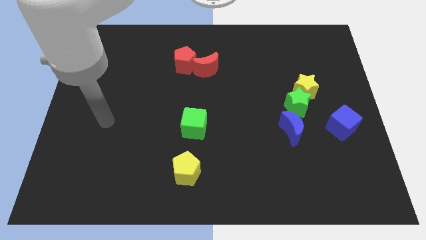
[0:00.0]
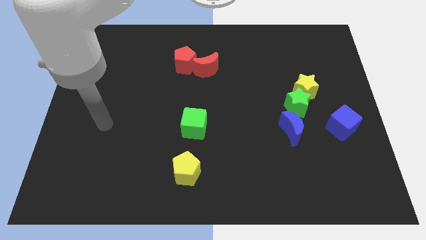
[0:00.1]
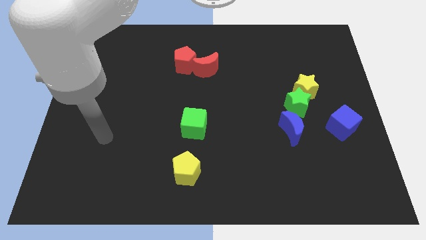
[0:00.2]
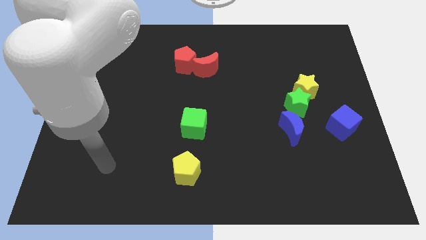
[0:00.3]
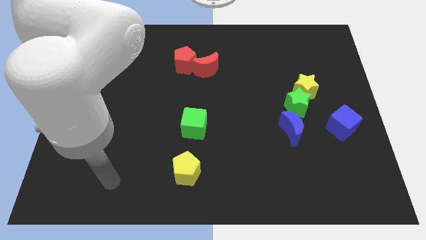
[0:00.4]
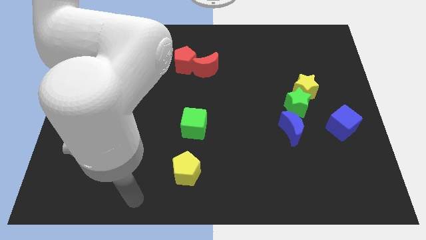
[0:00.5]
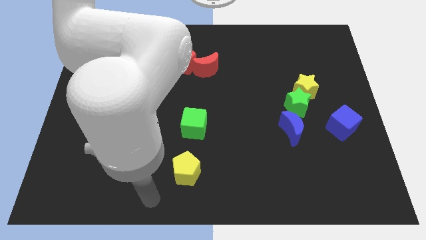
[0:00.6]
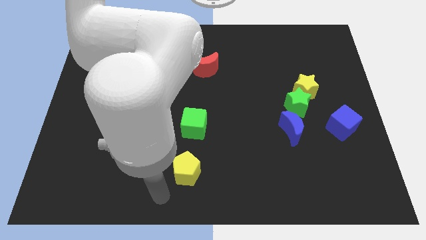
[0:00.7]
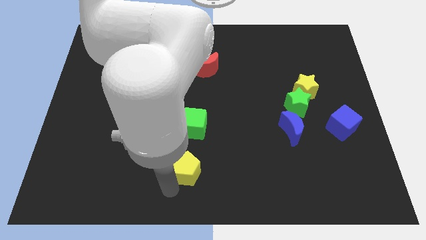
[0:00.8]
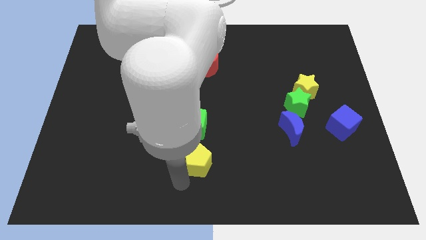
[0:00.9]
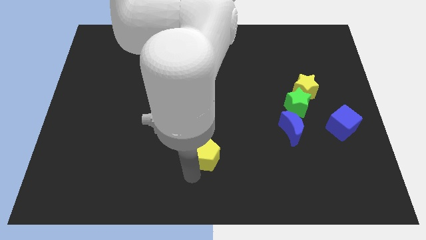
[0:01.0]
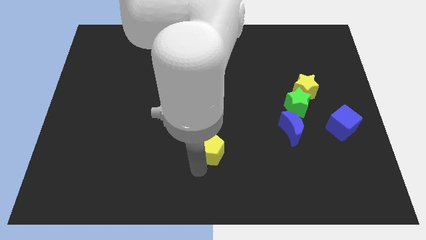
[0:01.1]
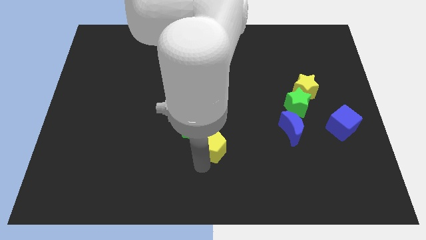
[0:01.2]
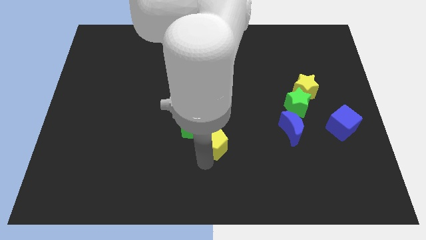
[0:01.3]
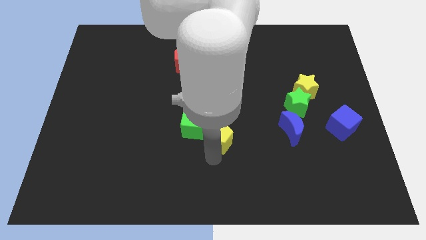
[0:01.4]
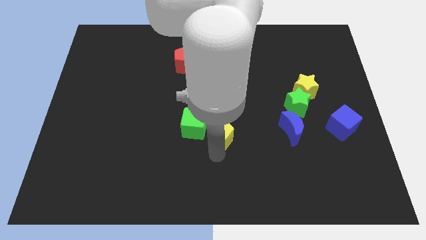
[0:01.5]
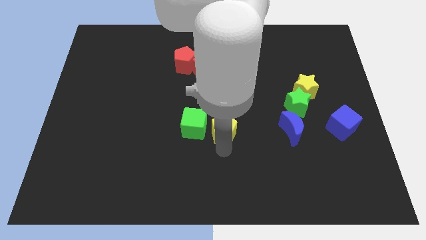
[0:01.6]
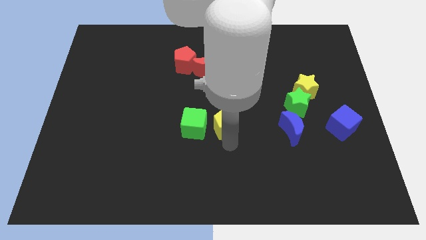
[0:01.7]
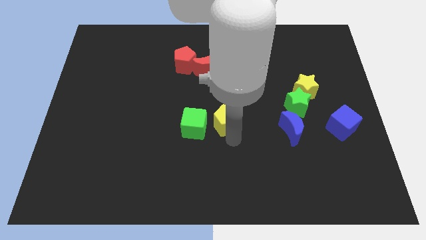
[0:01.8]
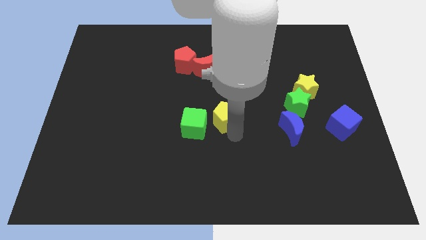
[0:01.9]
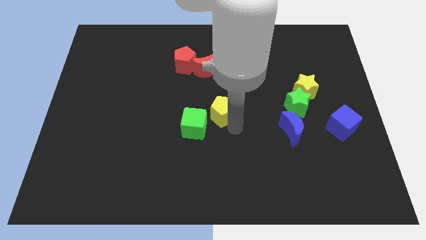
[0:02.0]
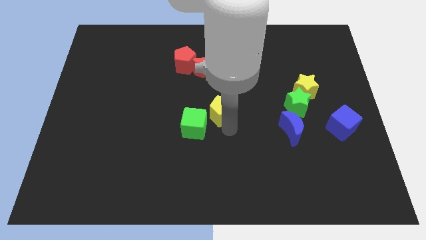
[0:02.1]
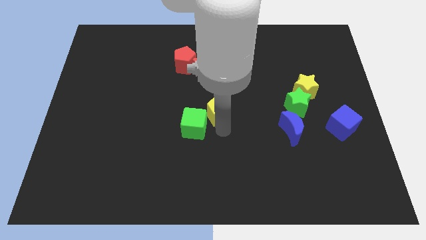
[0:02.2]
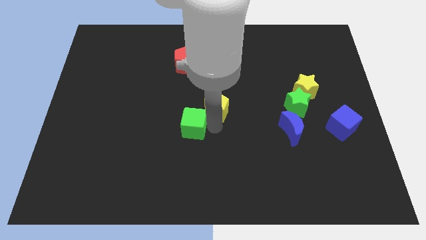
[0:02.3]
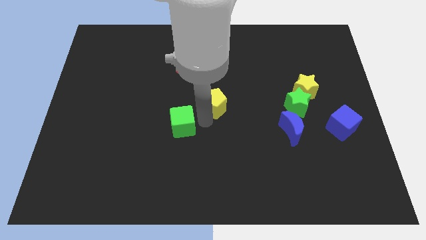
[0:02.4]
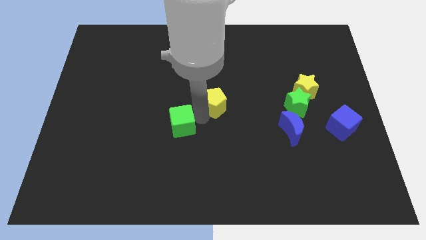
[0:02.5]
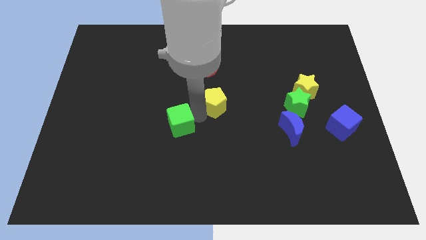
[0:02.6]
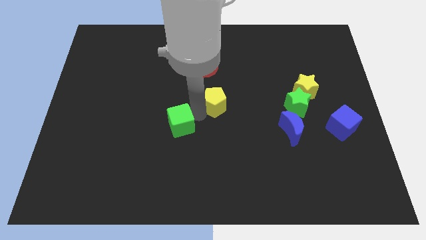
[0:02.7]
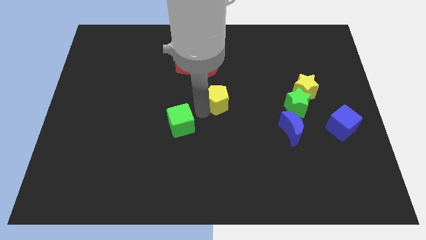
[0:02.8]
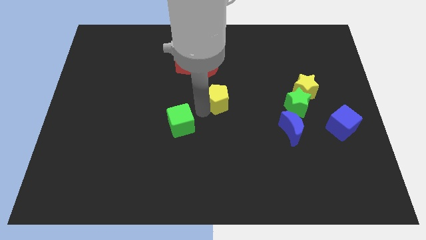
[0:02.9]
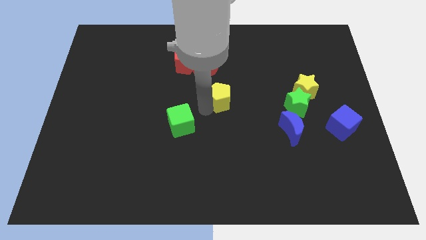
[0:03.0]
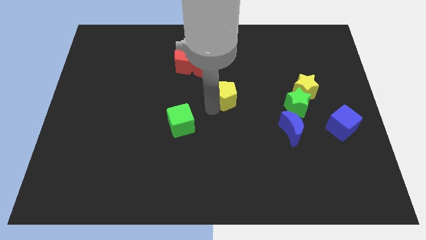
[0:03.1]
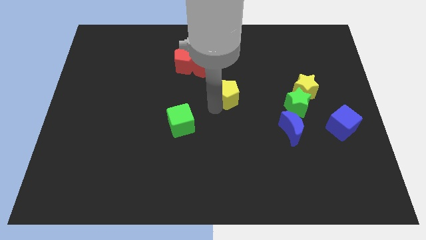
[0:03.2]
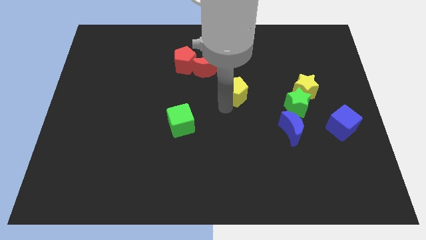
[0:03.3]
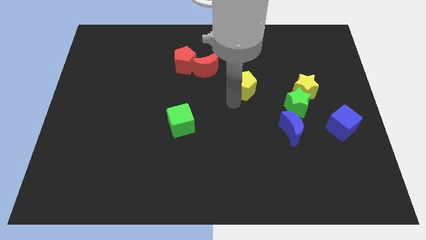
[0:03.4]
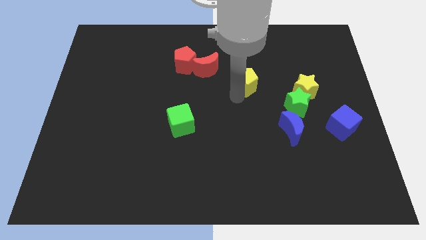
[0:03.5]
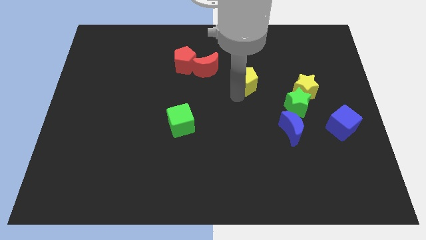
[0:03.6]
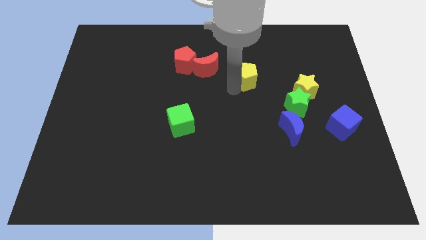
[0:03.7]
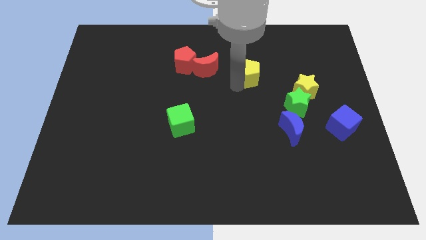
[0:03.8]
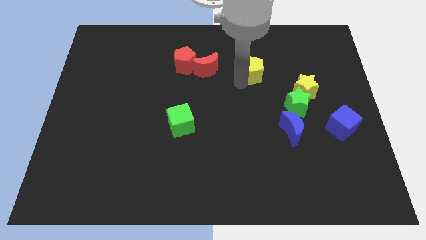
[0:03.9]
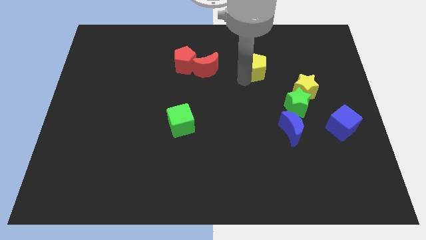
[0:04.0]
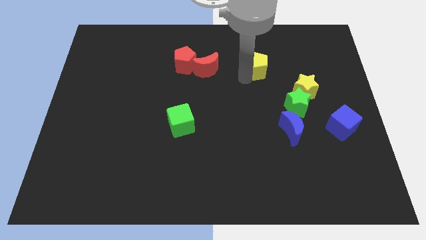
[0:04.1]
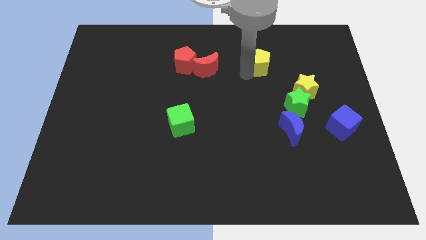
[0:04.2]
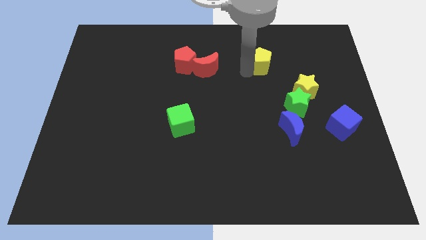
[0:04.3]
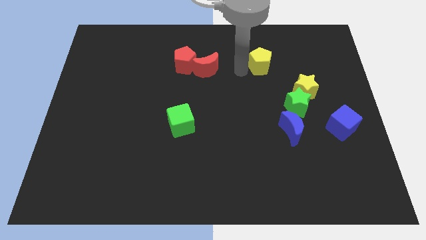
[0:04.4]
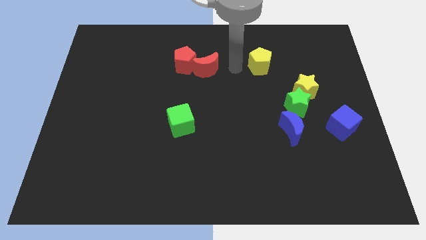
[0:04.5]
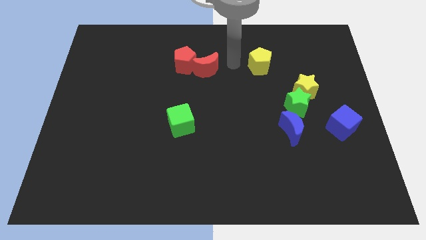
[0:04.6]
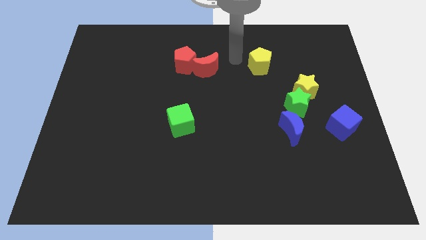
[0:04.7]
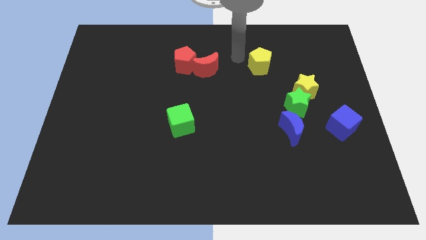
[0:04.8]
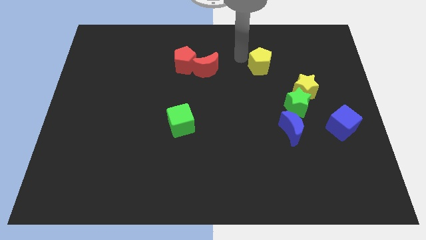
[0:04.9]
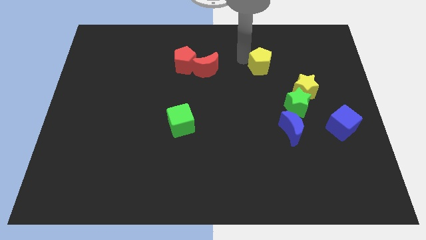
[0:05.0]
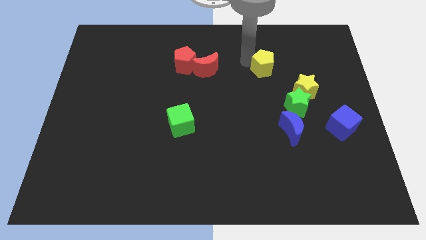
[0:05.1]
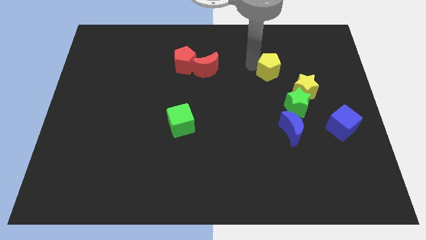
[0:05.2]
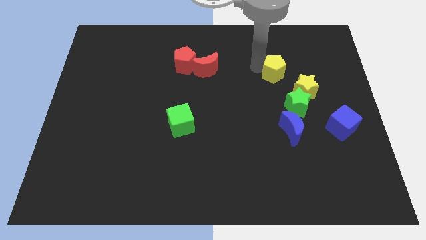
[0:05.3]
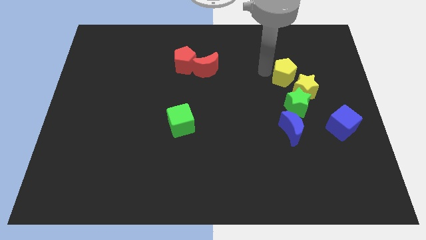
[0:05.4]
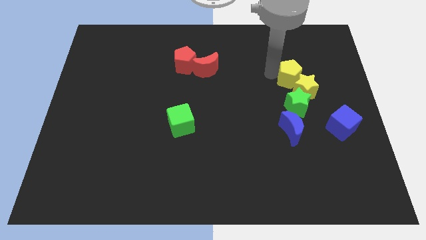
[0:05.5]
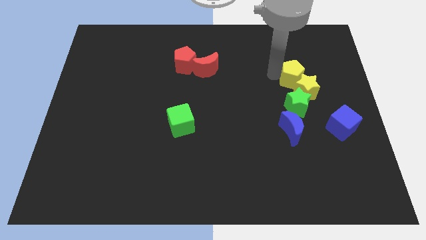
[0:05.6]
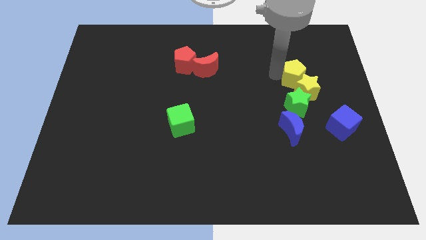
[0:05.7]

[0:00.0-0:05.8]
push the yellow pentagon to the yellow star

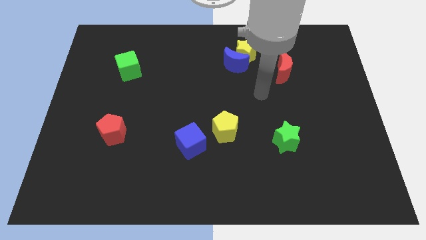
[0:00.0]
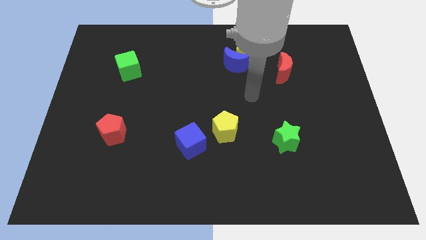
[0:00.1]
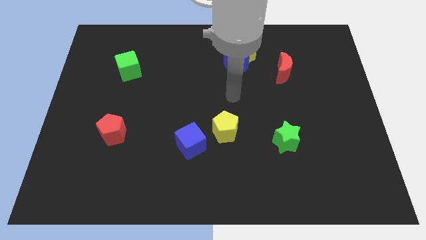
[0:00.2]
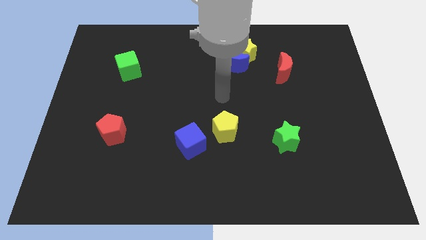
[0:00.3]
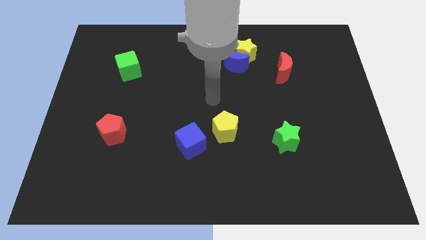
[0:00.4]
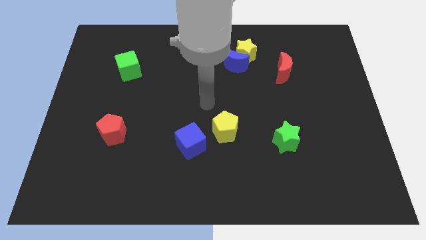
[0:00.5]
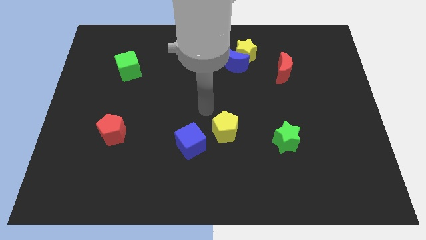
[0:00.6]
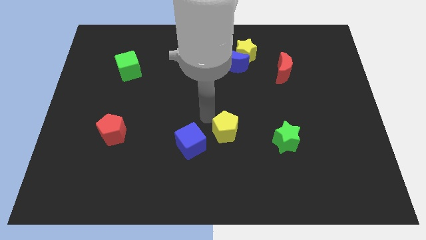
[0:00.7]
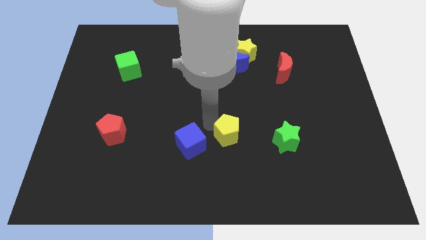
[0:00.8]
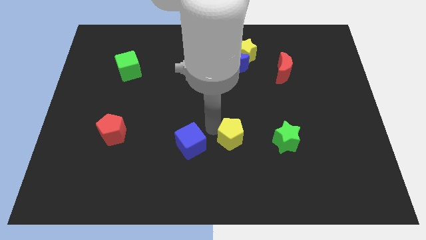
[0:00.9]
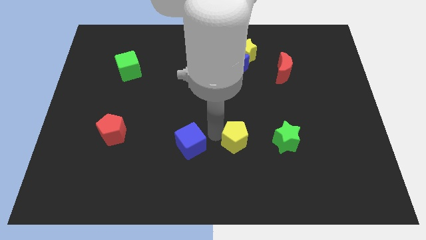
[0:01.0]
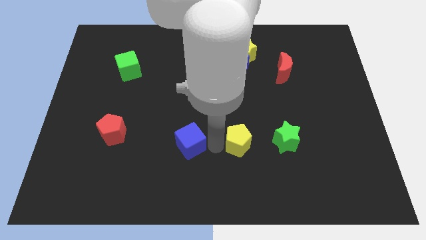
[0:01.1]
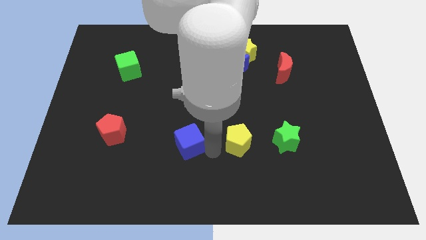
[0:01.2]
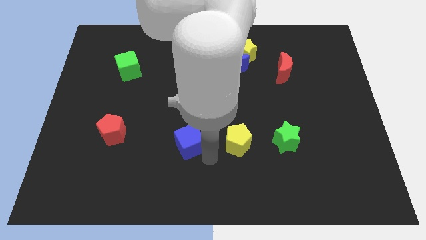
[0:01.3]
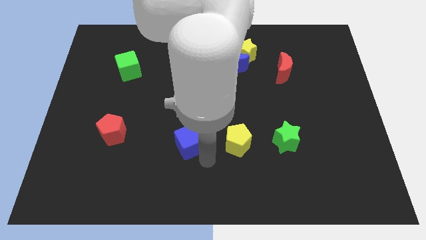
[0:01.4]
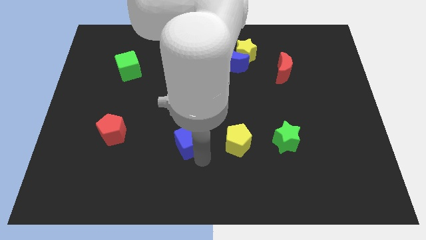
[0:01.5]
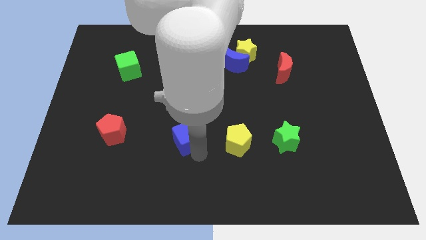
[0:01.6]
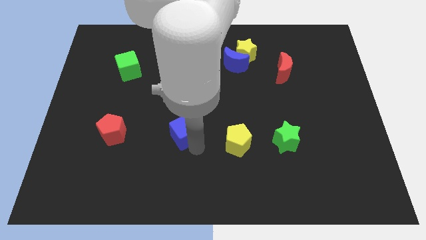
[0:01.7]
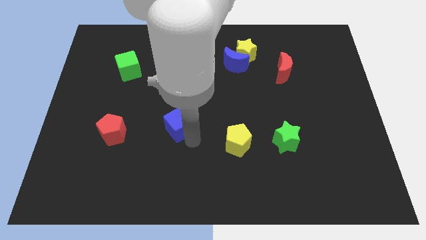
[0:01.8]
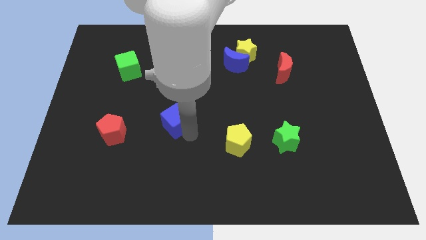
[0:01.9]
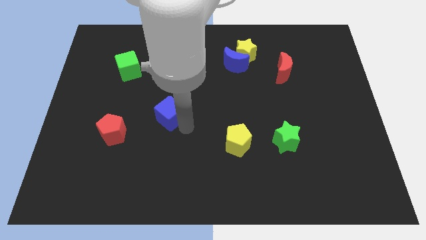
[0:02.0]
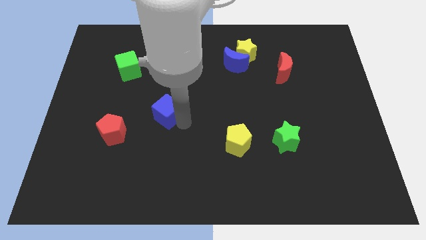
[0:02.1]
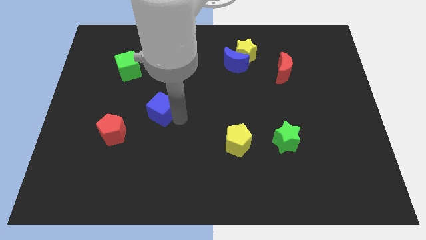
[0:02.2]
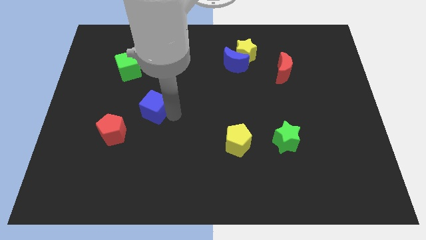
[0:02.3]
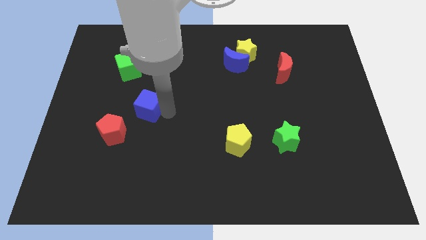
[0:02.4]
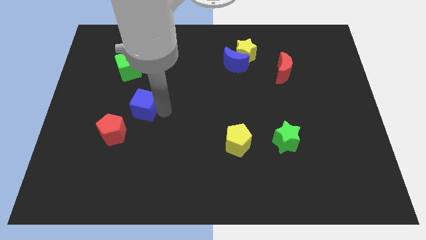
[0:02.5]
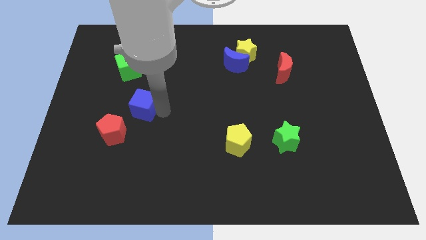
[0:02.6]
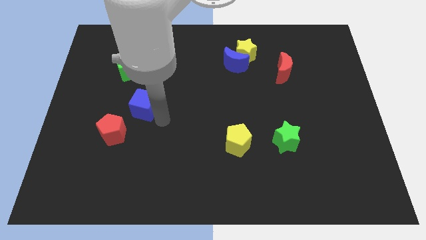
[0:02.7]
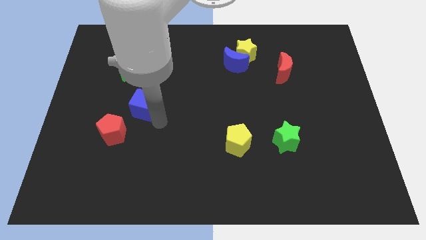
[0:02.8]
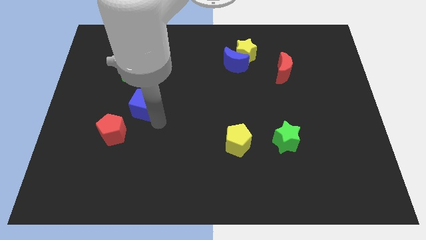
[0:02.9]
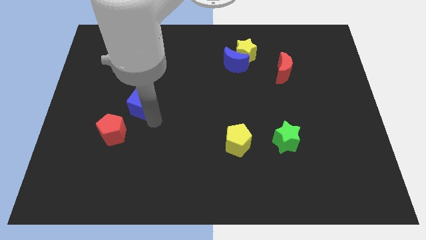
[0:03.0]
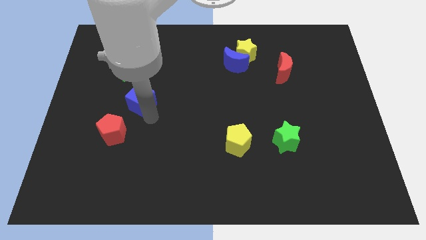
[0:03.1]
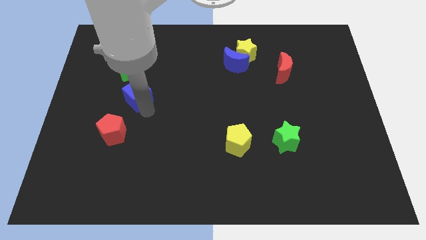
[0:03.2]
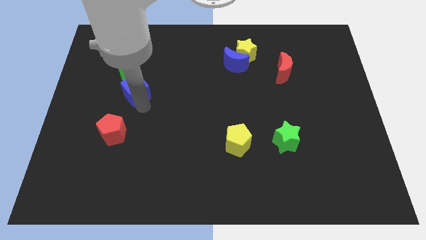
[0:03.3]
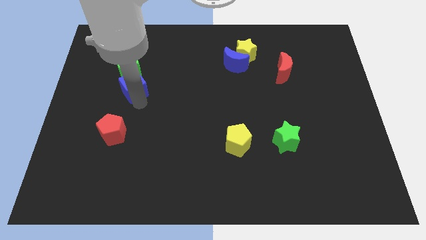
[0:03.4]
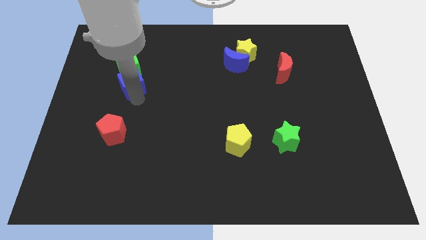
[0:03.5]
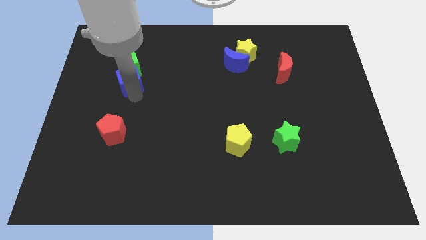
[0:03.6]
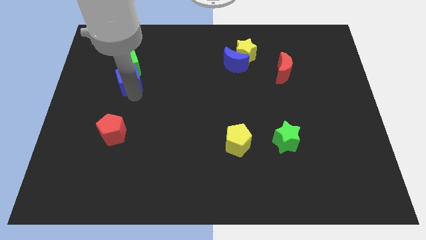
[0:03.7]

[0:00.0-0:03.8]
move the blue cube towards the green cube
